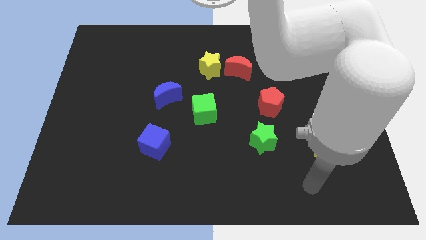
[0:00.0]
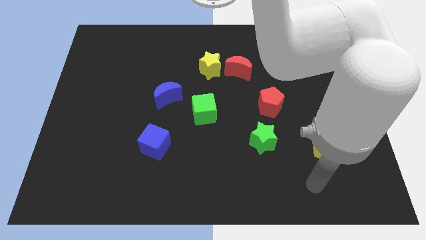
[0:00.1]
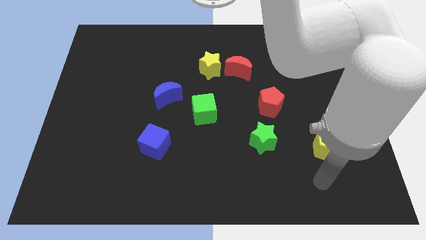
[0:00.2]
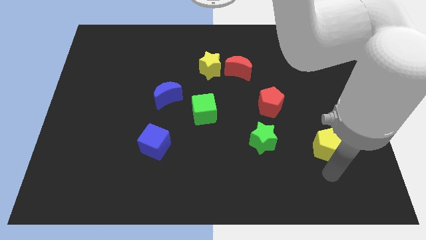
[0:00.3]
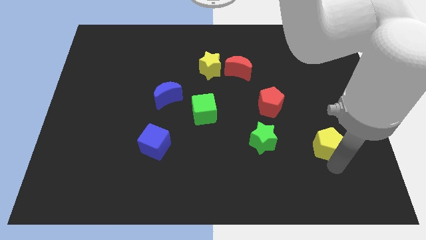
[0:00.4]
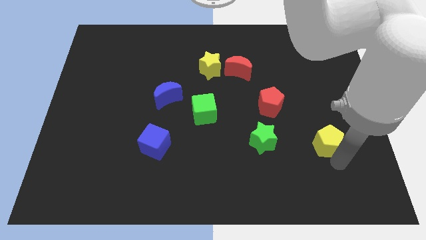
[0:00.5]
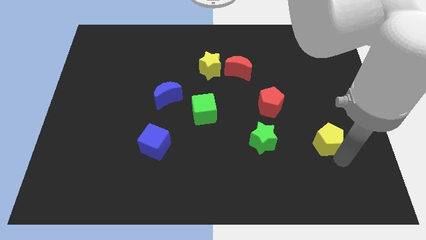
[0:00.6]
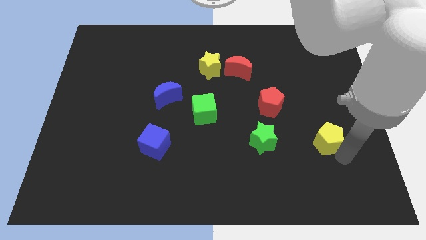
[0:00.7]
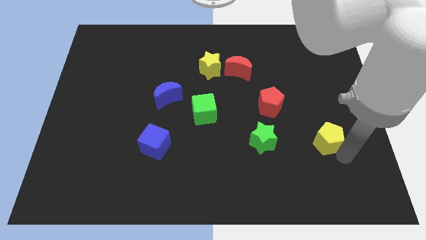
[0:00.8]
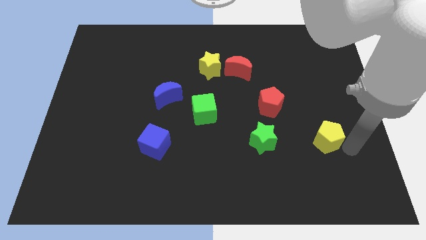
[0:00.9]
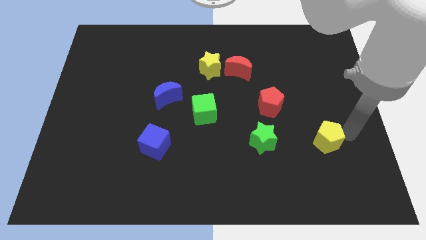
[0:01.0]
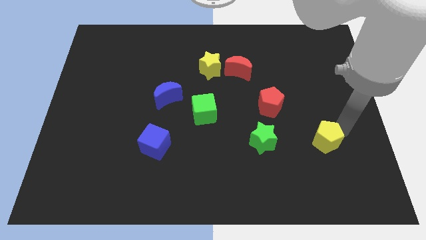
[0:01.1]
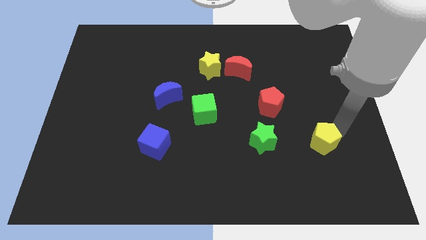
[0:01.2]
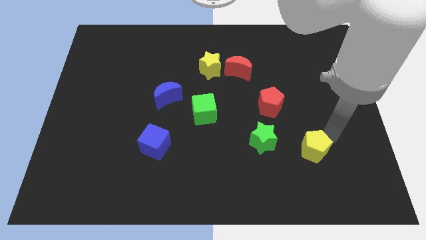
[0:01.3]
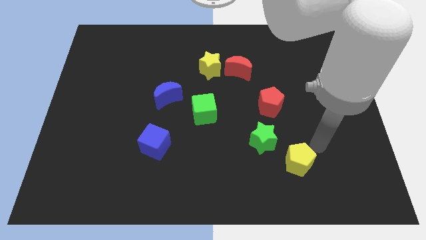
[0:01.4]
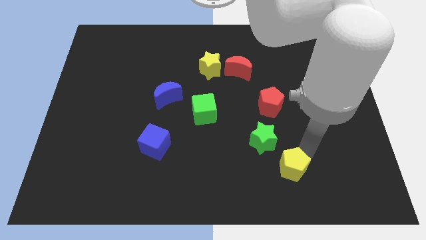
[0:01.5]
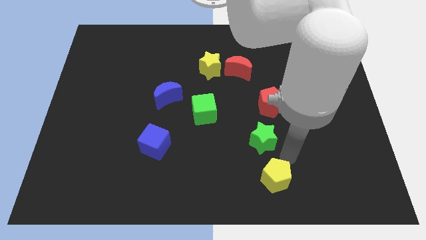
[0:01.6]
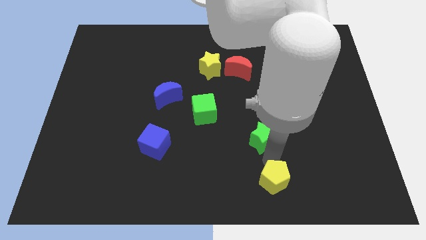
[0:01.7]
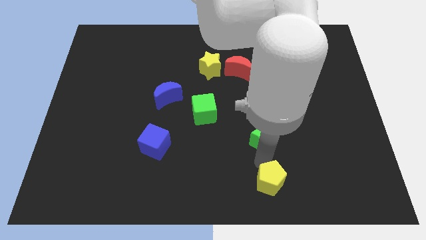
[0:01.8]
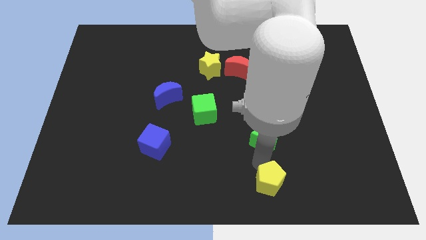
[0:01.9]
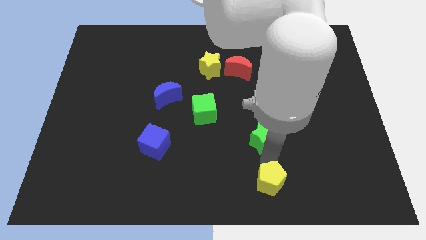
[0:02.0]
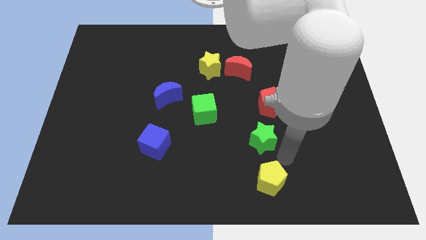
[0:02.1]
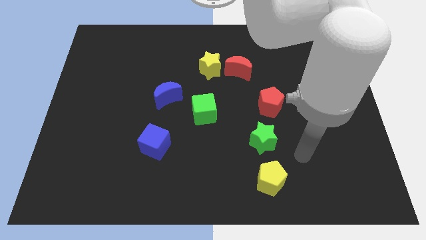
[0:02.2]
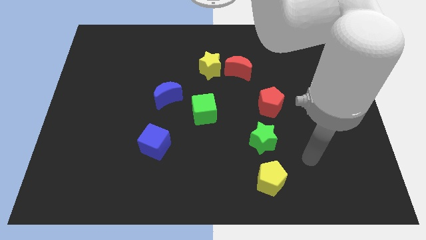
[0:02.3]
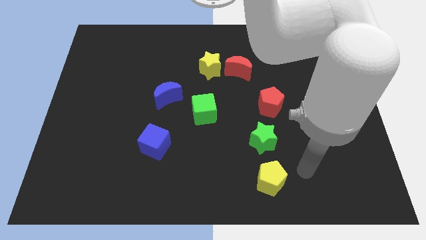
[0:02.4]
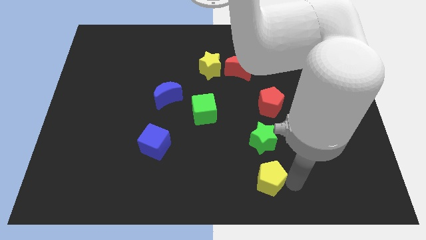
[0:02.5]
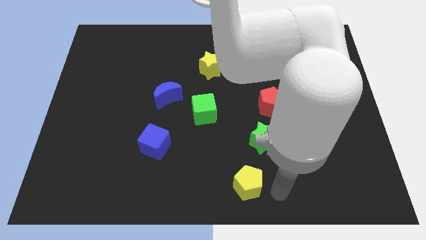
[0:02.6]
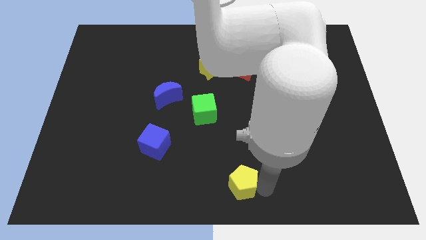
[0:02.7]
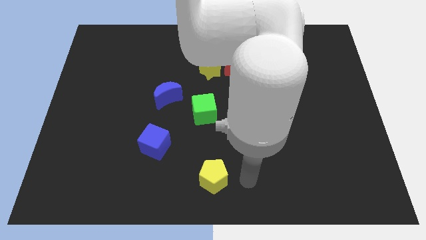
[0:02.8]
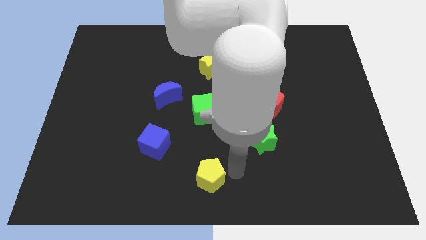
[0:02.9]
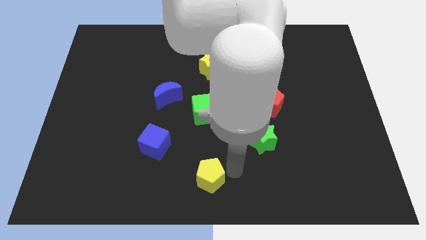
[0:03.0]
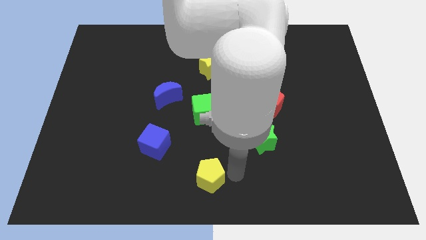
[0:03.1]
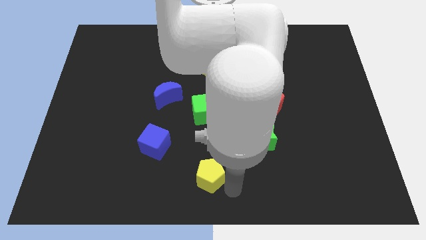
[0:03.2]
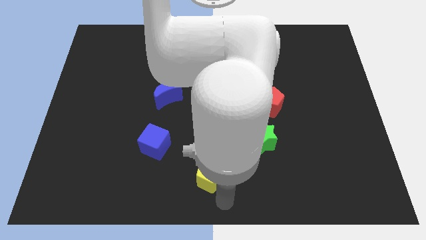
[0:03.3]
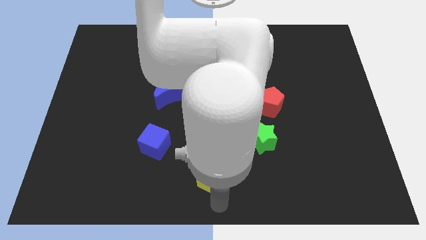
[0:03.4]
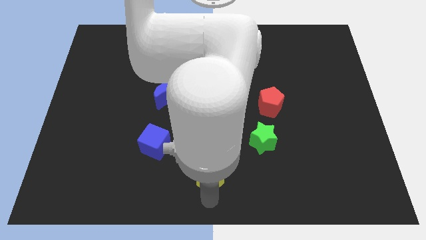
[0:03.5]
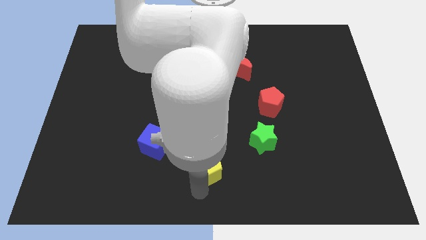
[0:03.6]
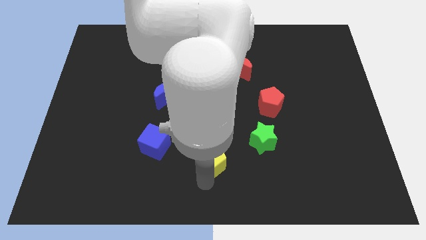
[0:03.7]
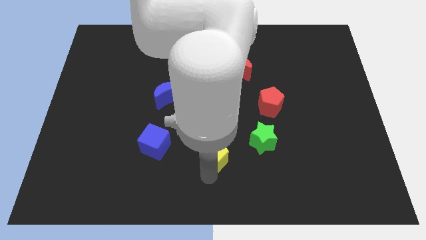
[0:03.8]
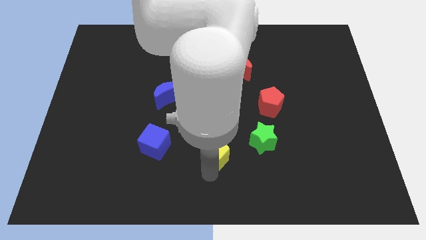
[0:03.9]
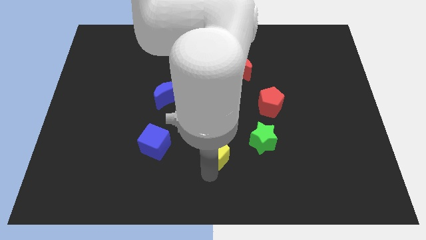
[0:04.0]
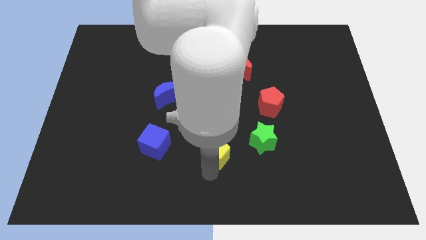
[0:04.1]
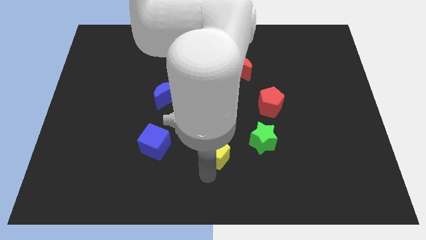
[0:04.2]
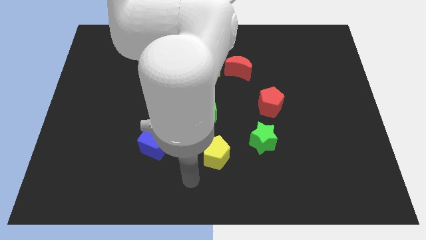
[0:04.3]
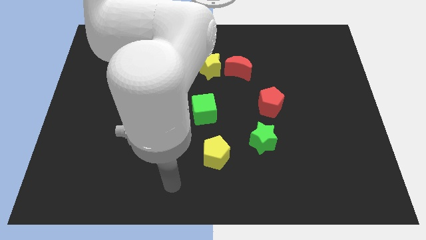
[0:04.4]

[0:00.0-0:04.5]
place the yellow pentagon in between green star and blue cube

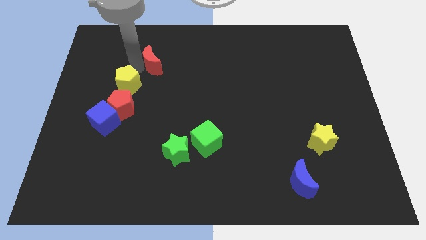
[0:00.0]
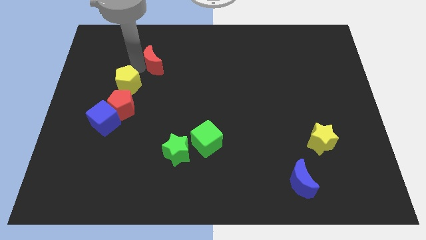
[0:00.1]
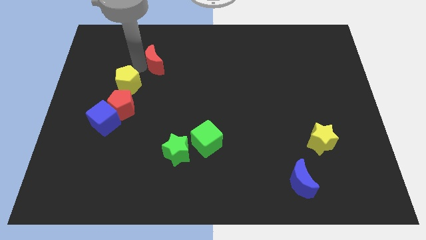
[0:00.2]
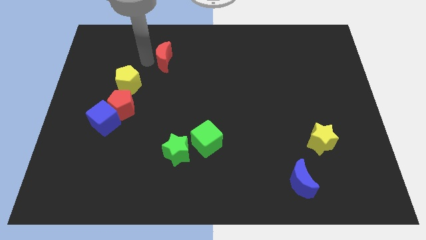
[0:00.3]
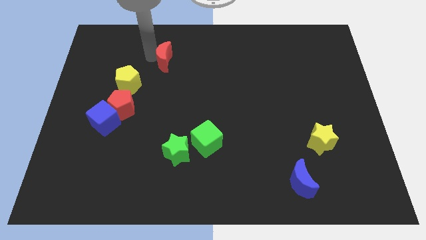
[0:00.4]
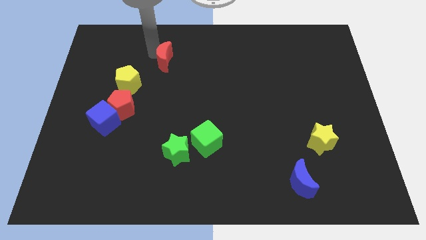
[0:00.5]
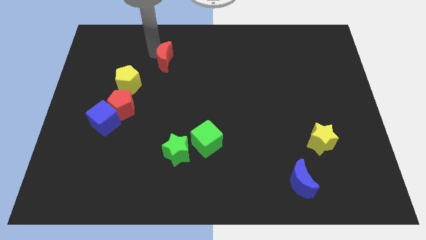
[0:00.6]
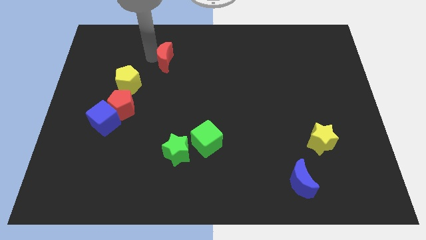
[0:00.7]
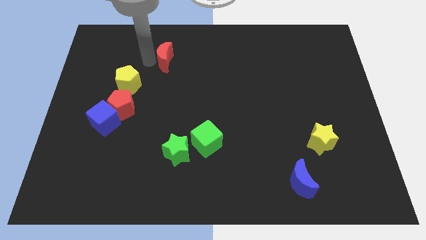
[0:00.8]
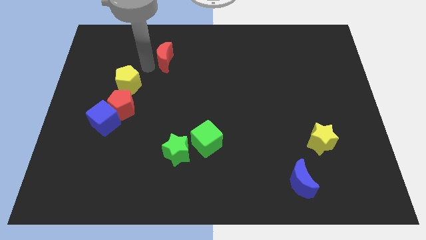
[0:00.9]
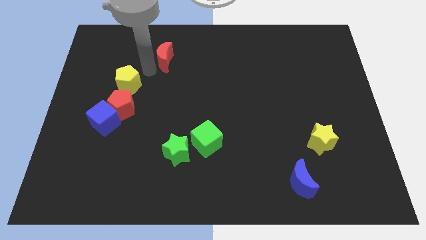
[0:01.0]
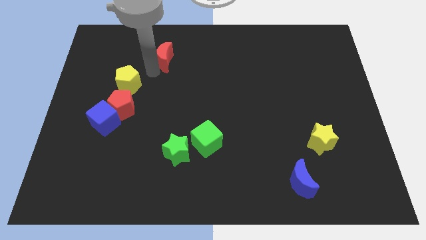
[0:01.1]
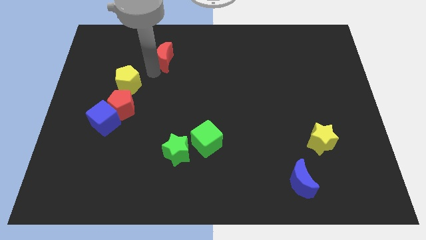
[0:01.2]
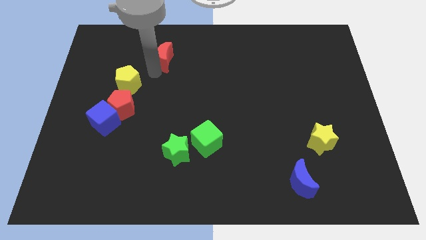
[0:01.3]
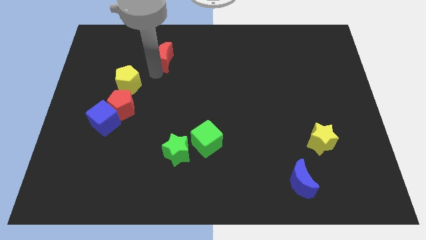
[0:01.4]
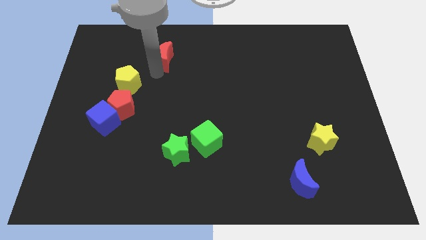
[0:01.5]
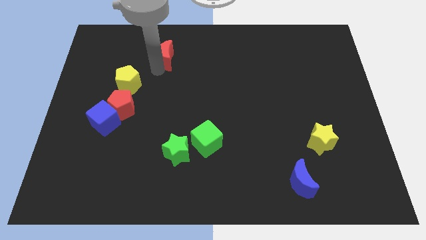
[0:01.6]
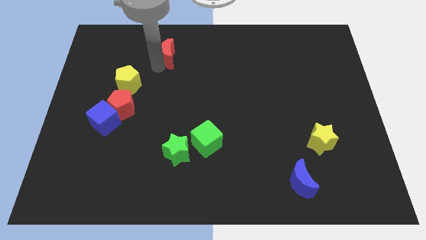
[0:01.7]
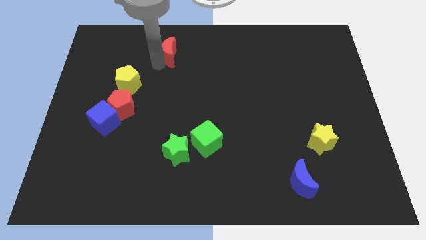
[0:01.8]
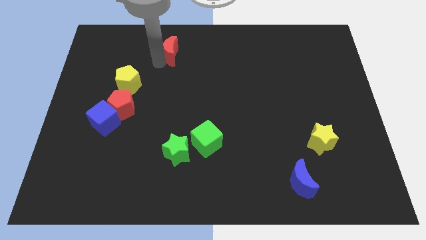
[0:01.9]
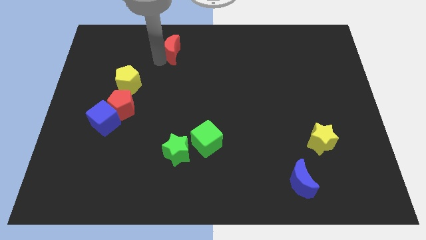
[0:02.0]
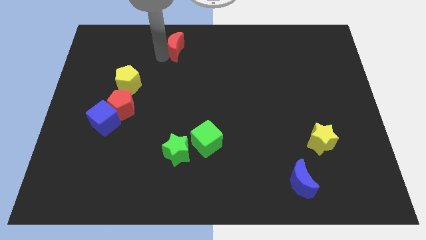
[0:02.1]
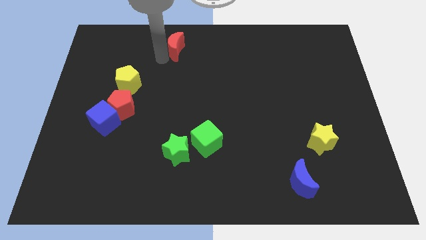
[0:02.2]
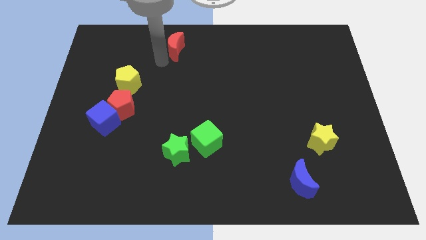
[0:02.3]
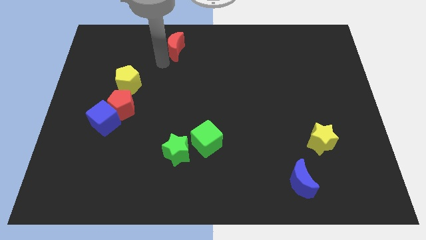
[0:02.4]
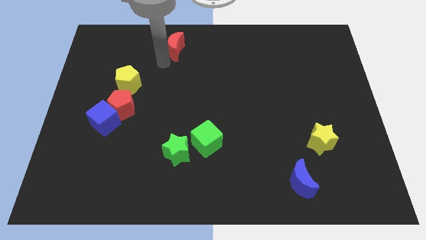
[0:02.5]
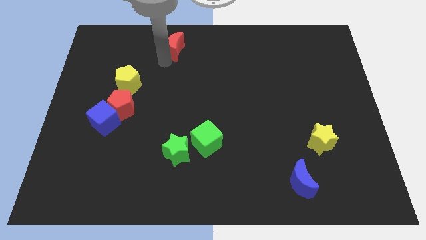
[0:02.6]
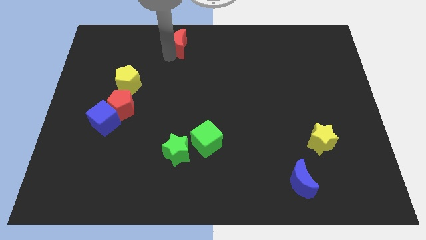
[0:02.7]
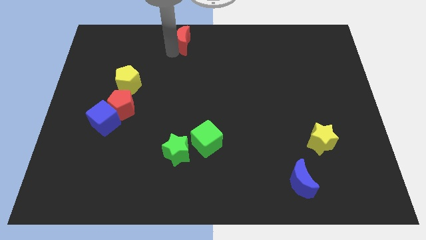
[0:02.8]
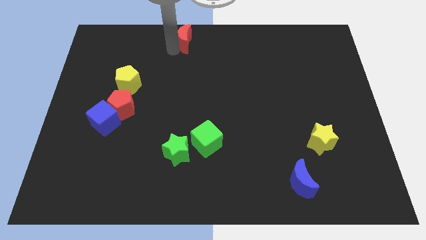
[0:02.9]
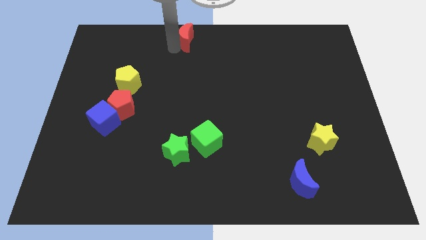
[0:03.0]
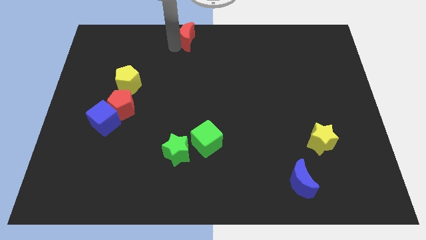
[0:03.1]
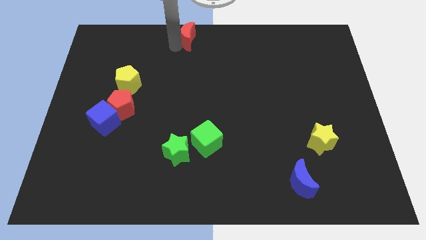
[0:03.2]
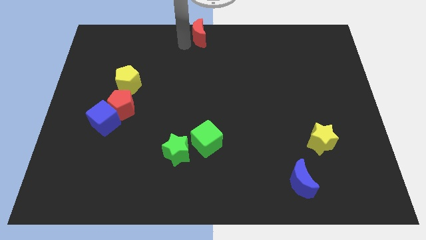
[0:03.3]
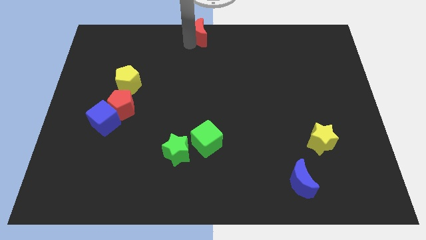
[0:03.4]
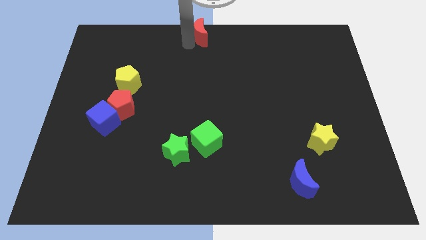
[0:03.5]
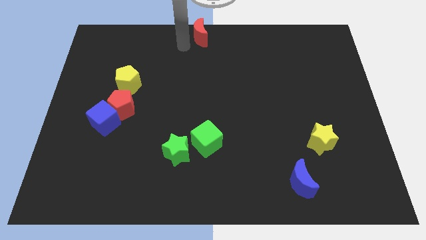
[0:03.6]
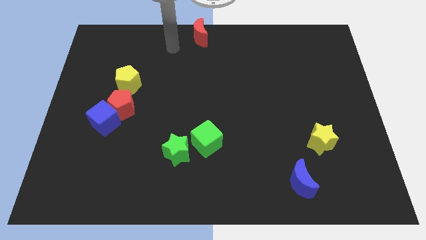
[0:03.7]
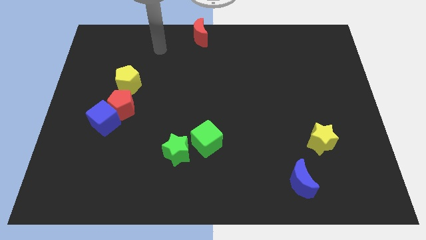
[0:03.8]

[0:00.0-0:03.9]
push the red crescent to the top center of the board

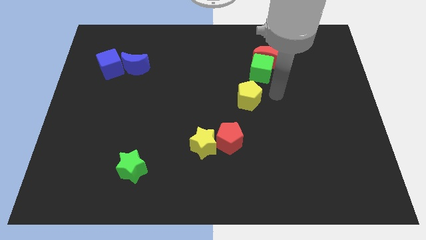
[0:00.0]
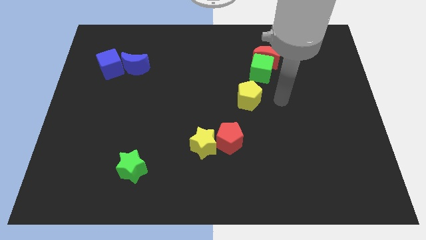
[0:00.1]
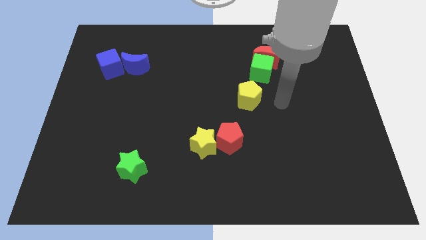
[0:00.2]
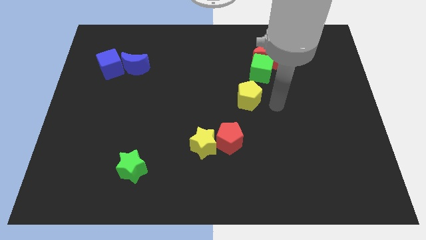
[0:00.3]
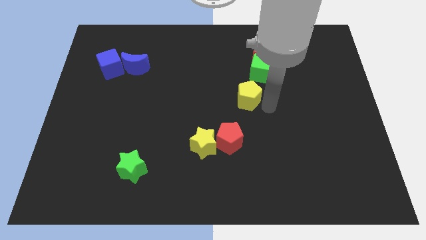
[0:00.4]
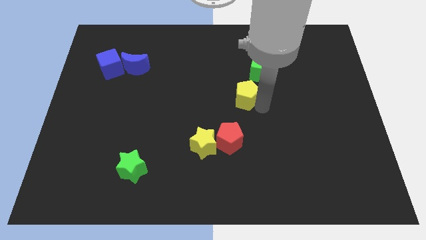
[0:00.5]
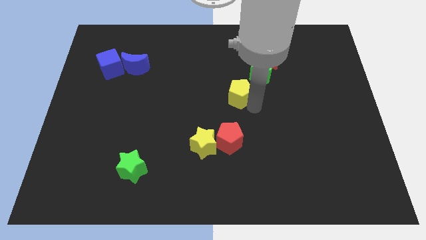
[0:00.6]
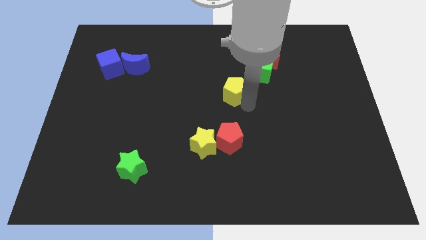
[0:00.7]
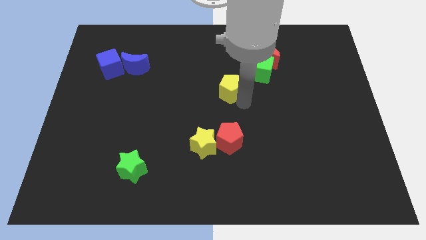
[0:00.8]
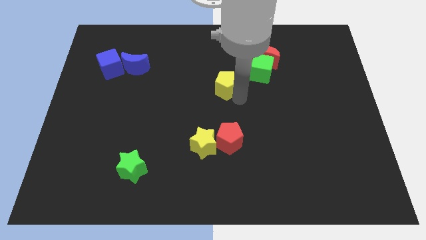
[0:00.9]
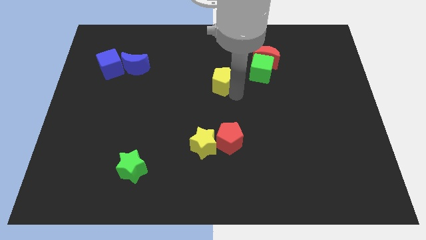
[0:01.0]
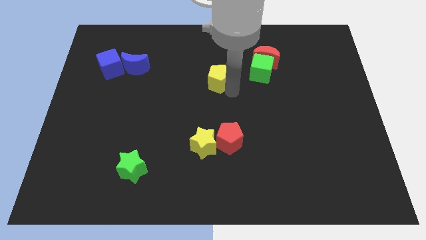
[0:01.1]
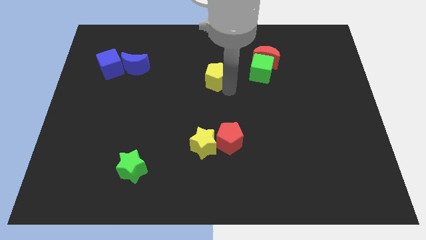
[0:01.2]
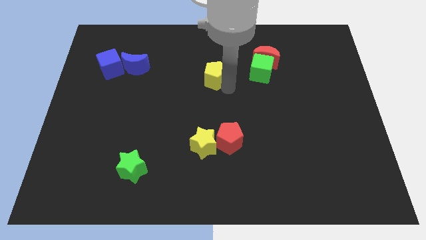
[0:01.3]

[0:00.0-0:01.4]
move the yellow pentagon to the center of the board
